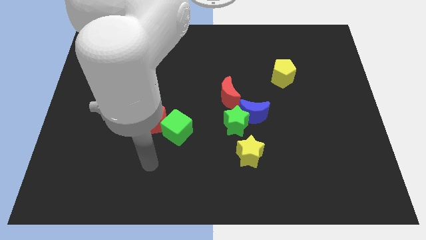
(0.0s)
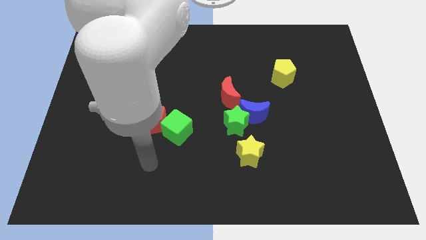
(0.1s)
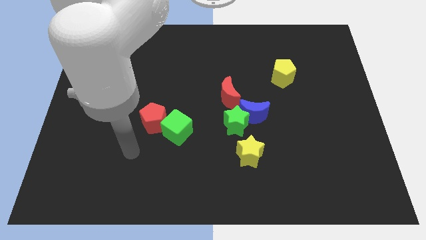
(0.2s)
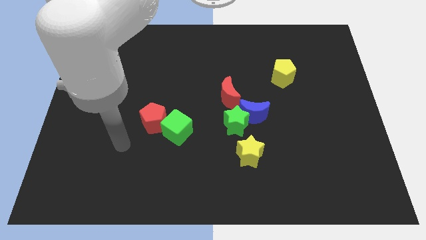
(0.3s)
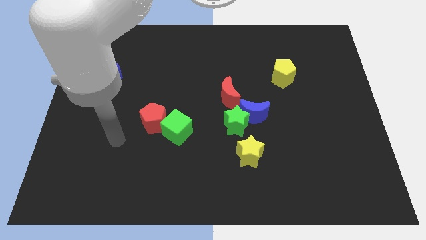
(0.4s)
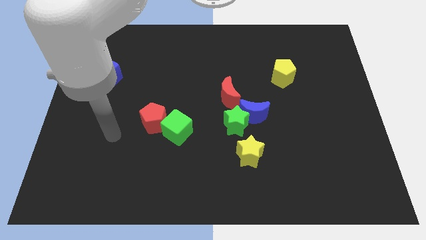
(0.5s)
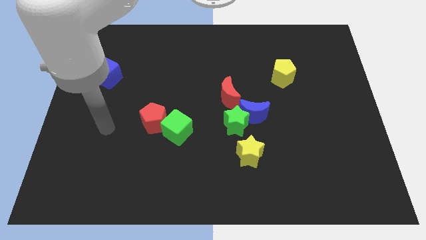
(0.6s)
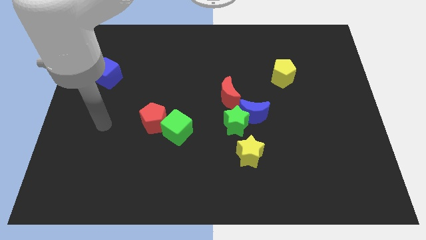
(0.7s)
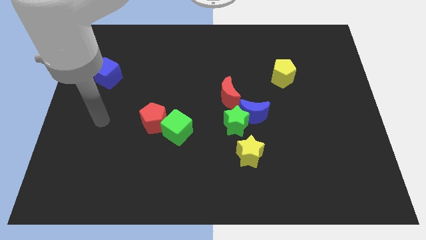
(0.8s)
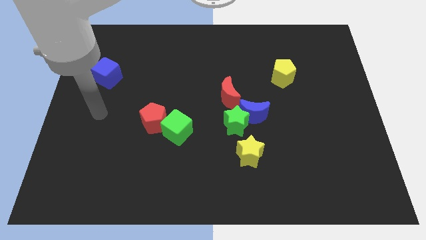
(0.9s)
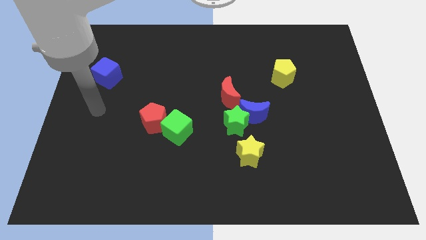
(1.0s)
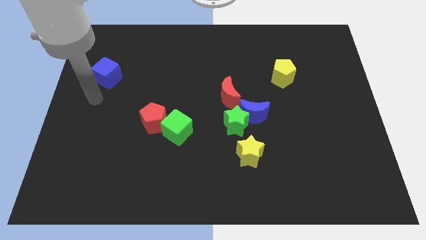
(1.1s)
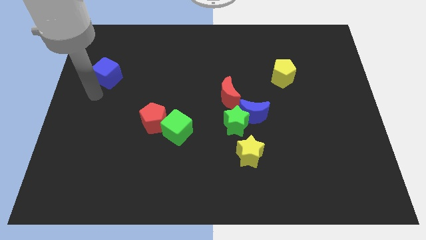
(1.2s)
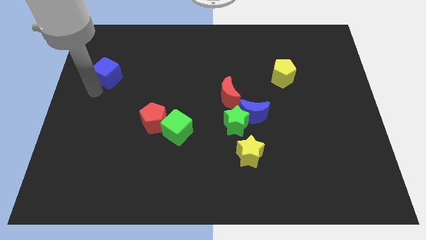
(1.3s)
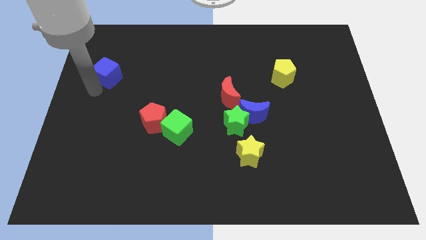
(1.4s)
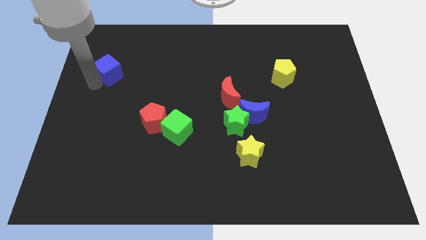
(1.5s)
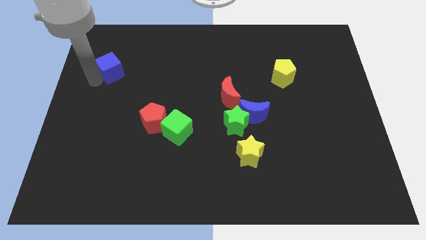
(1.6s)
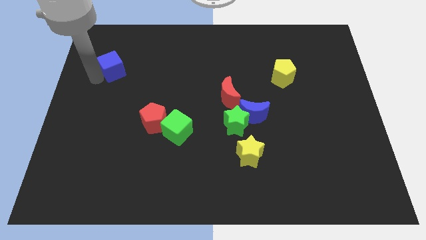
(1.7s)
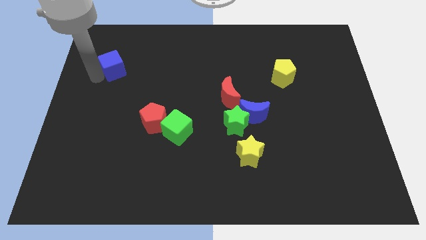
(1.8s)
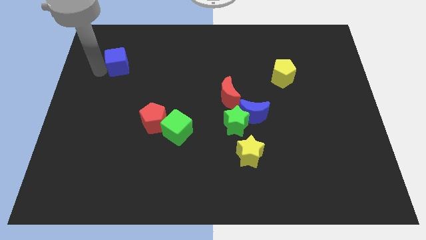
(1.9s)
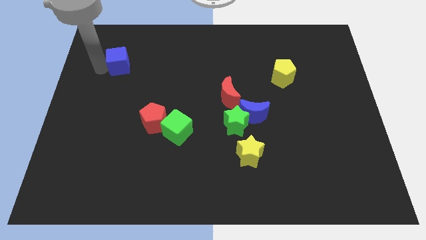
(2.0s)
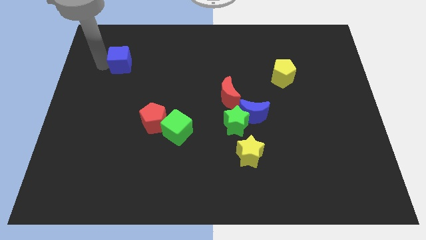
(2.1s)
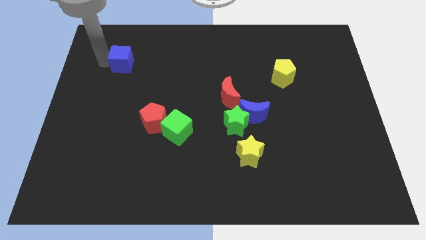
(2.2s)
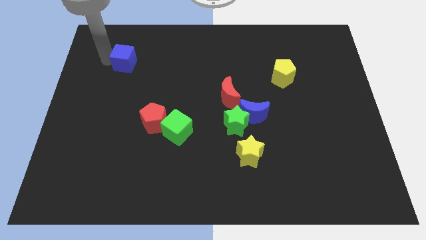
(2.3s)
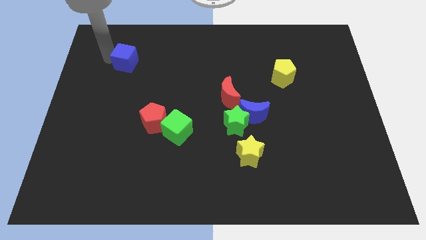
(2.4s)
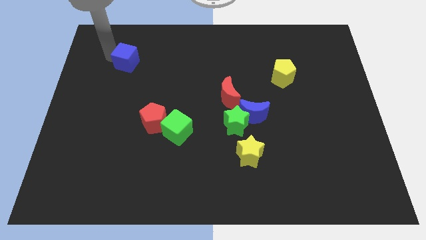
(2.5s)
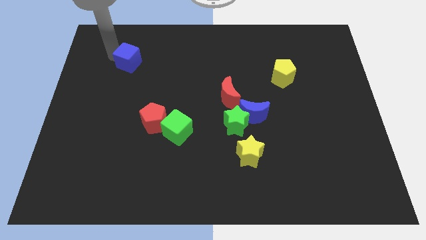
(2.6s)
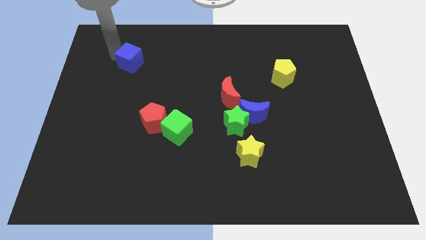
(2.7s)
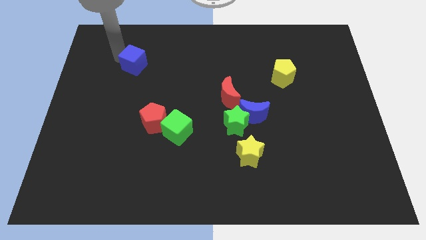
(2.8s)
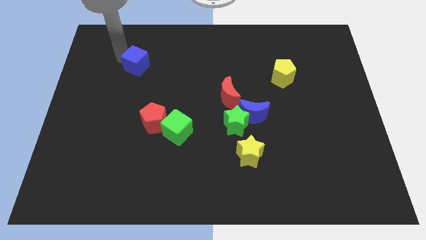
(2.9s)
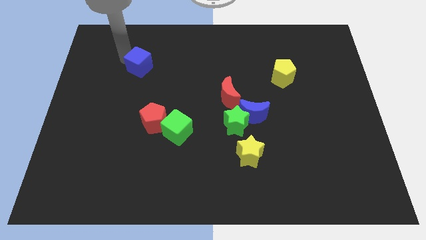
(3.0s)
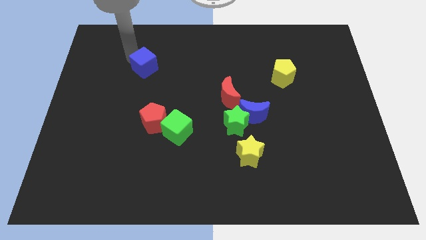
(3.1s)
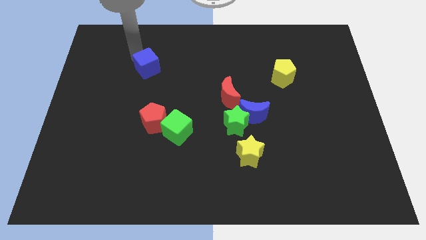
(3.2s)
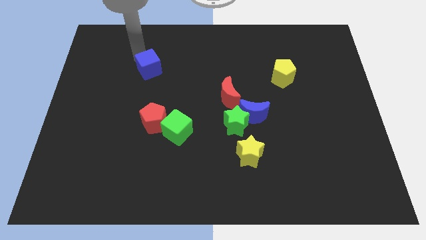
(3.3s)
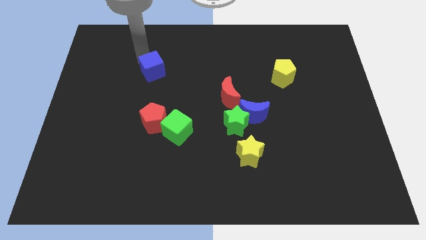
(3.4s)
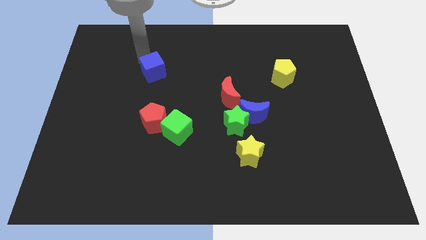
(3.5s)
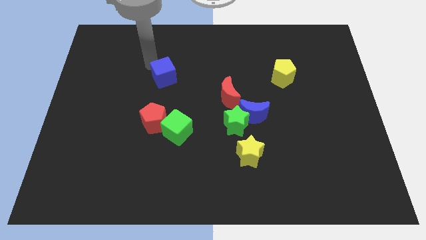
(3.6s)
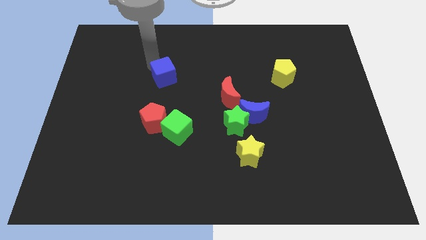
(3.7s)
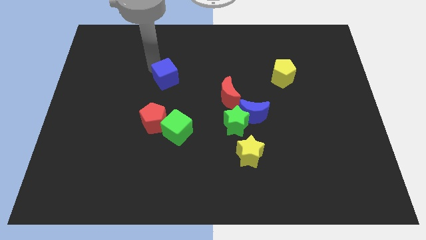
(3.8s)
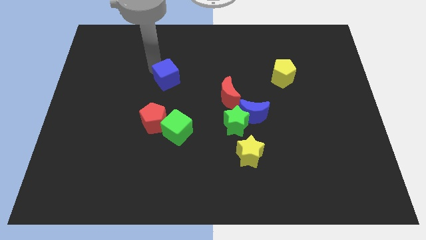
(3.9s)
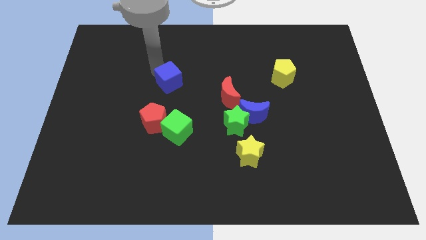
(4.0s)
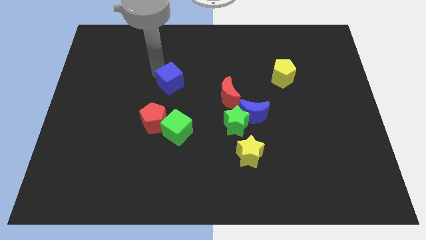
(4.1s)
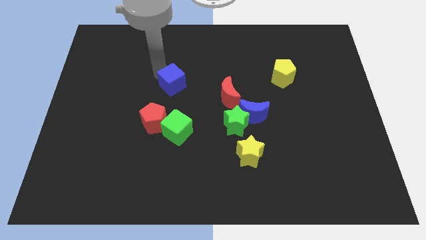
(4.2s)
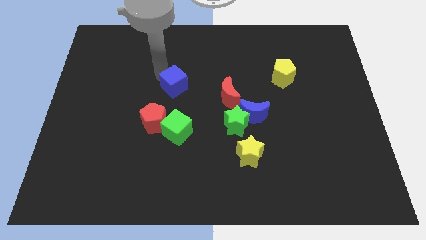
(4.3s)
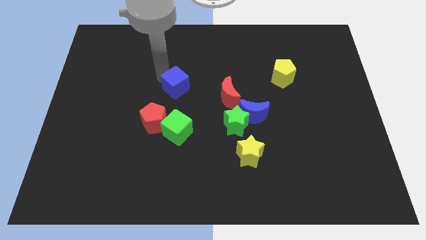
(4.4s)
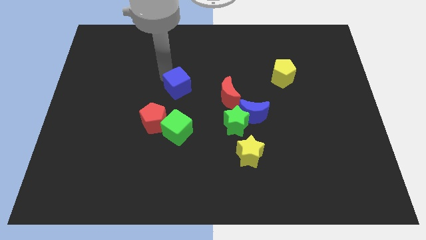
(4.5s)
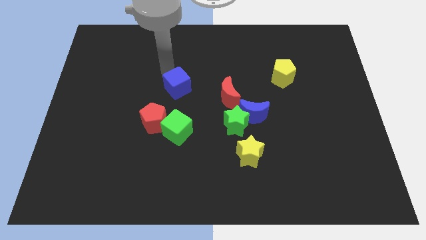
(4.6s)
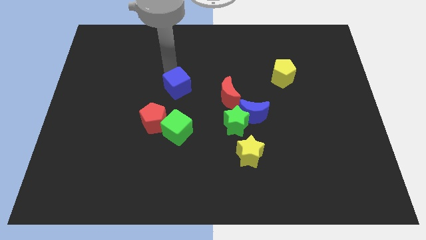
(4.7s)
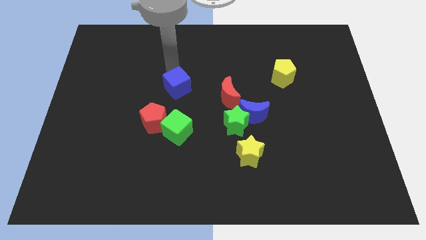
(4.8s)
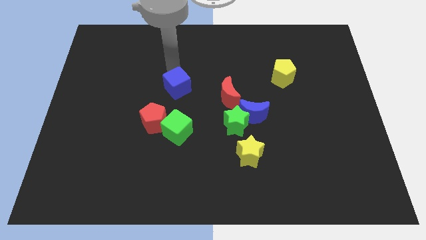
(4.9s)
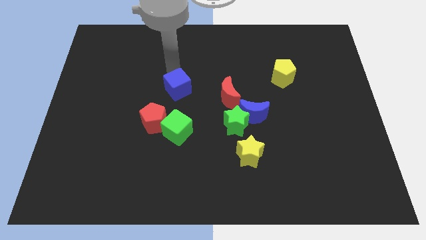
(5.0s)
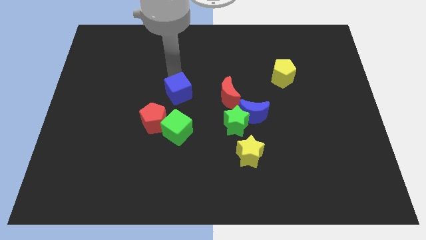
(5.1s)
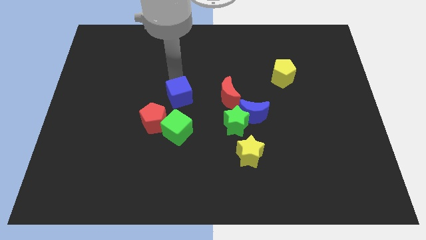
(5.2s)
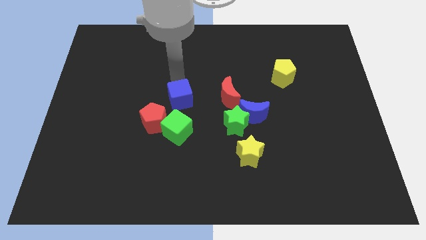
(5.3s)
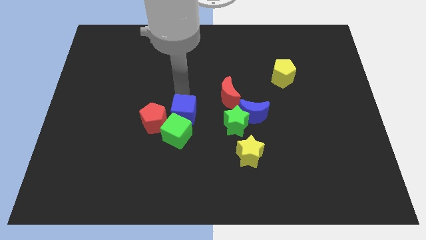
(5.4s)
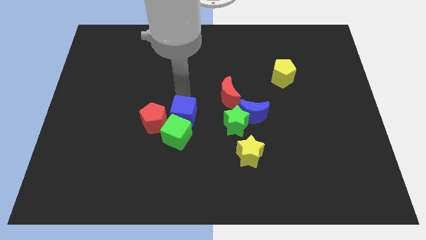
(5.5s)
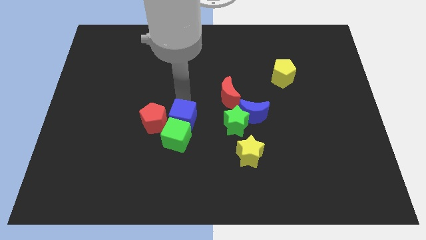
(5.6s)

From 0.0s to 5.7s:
slide the blue cube to the green cube

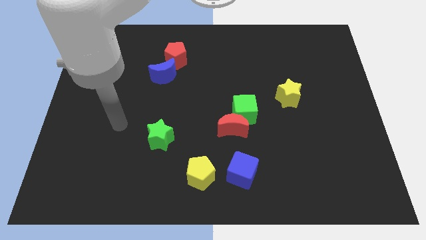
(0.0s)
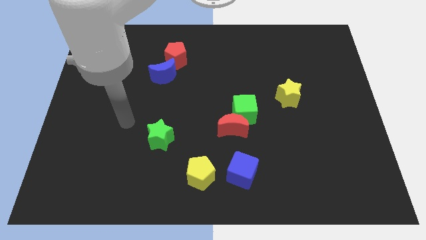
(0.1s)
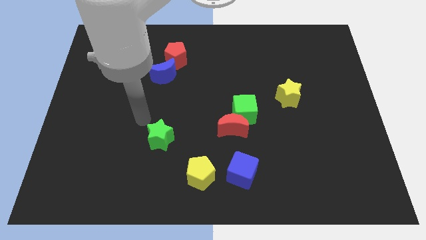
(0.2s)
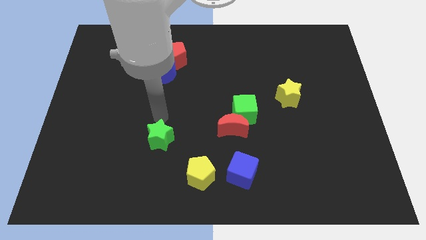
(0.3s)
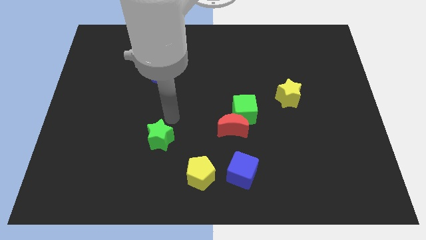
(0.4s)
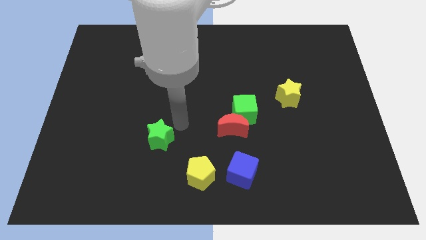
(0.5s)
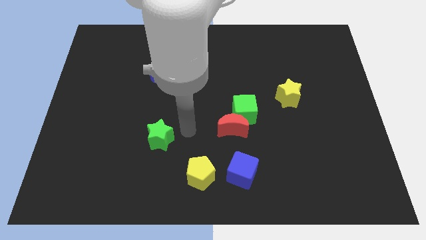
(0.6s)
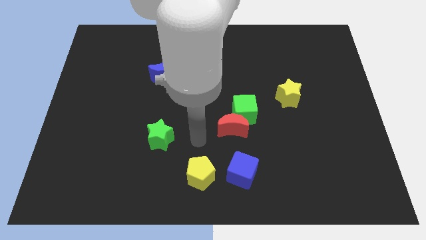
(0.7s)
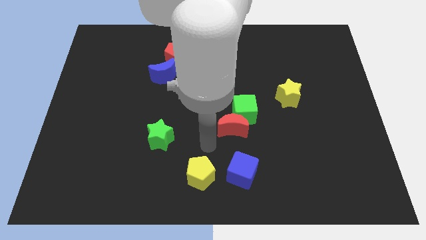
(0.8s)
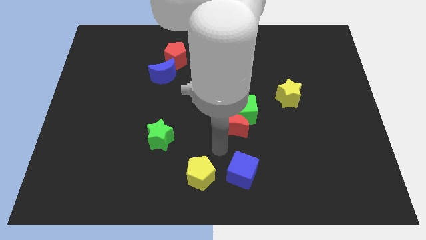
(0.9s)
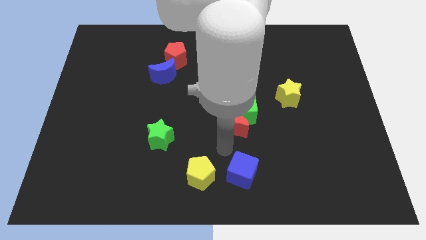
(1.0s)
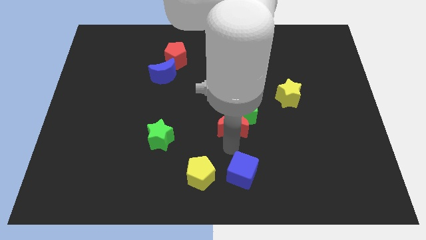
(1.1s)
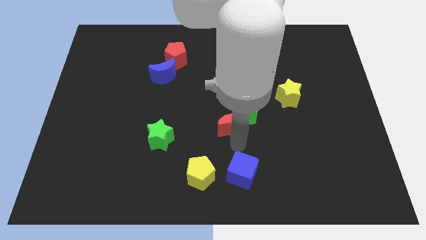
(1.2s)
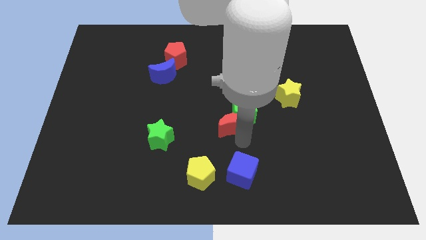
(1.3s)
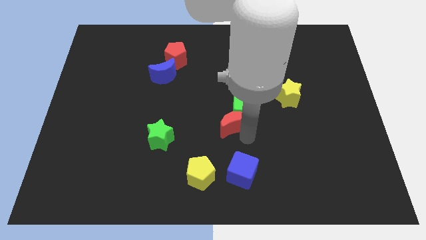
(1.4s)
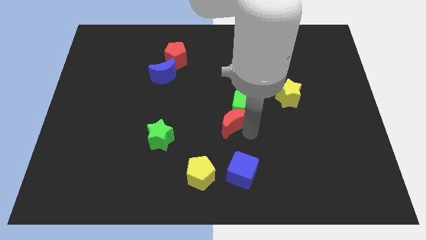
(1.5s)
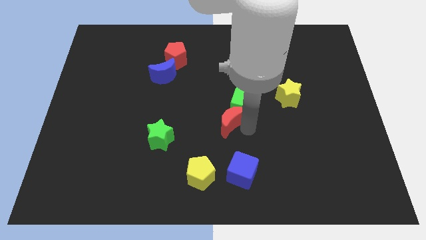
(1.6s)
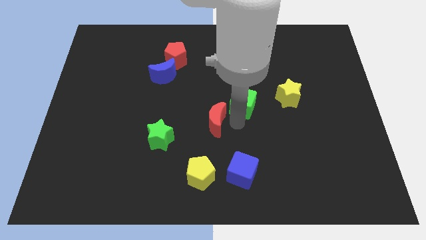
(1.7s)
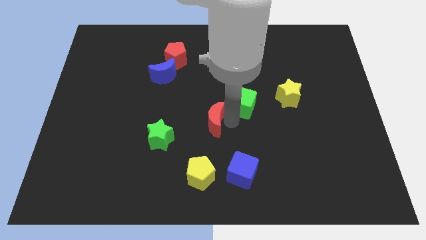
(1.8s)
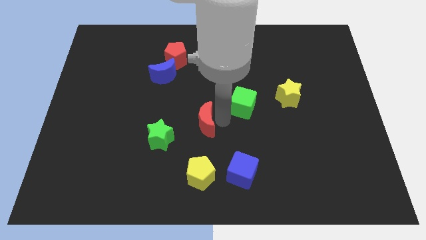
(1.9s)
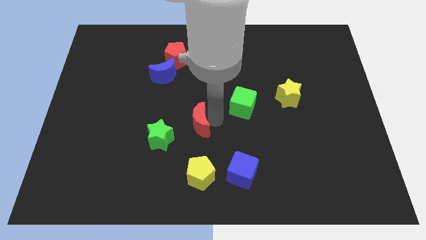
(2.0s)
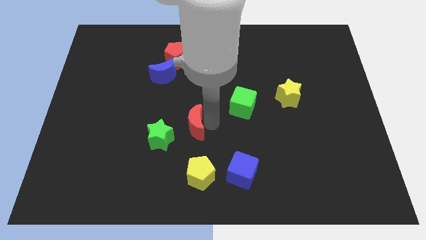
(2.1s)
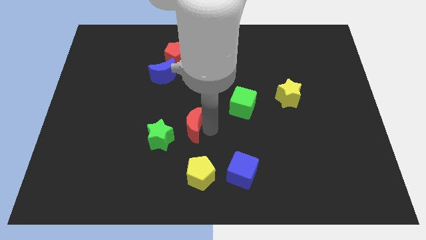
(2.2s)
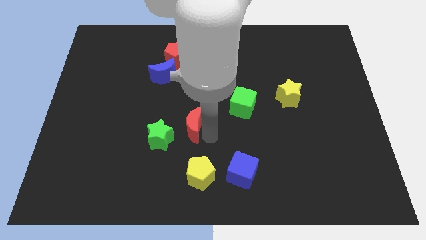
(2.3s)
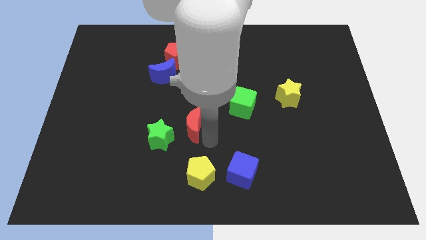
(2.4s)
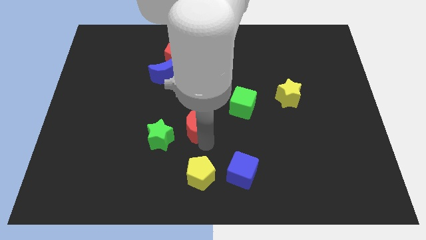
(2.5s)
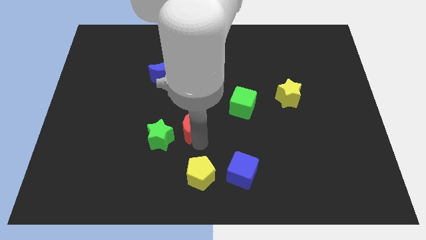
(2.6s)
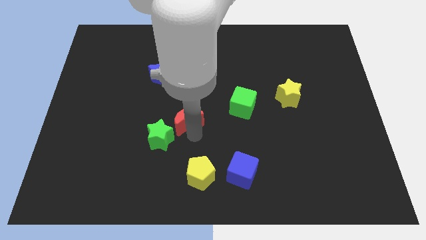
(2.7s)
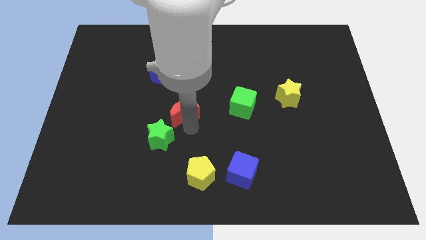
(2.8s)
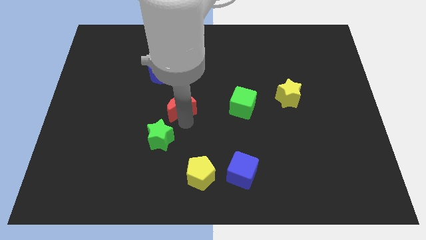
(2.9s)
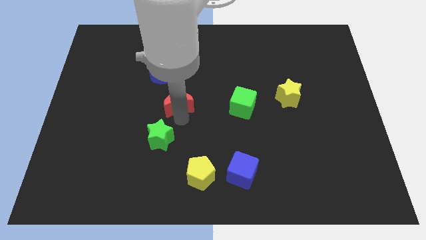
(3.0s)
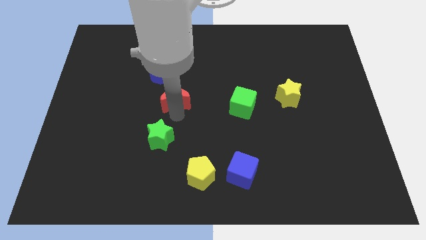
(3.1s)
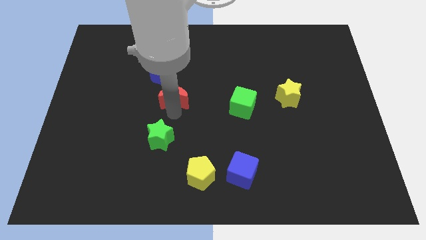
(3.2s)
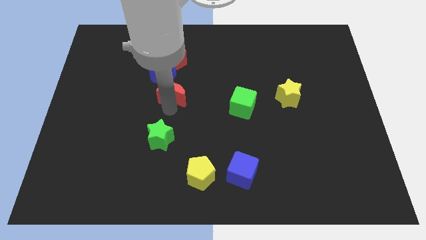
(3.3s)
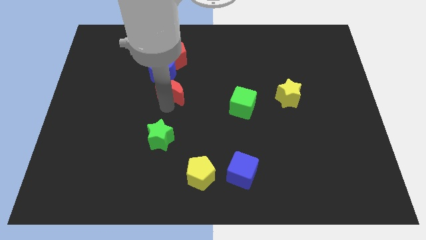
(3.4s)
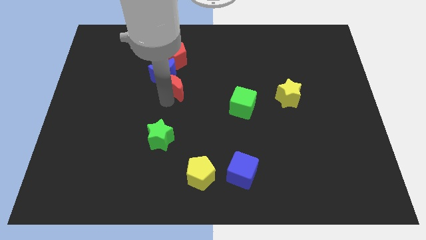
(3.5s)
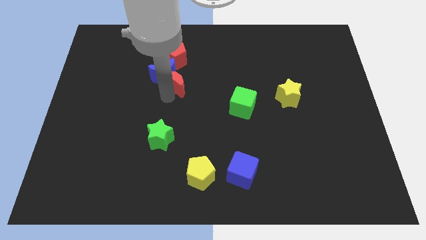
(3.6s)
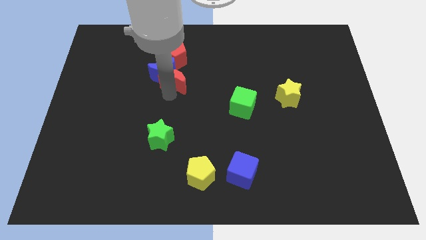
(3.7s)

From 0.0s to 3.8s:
push the red moon towards the blue moon
